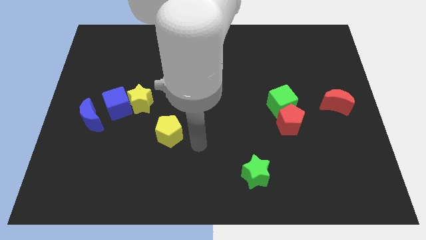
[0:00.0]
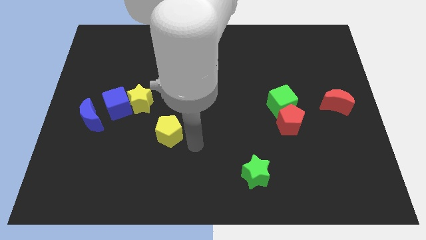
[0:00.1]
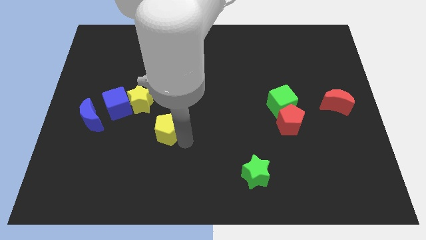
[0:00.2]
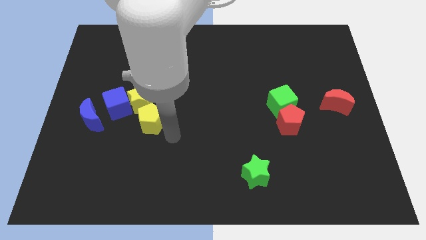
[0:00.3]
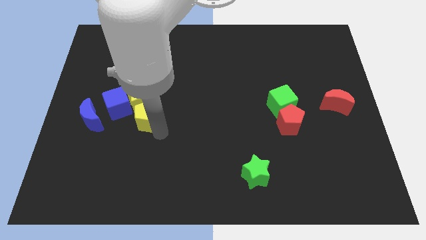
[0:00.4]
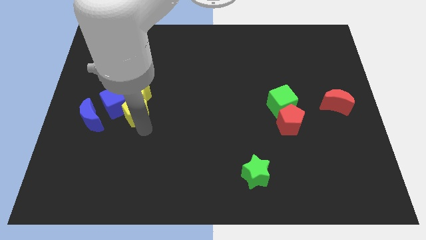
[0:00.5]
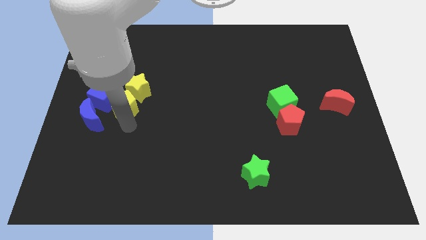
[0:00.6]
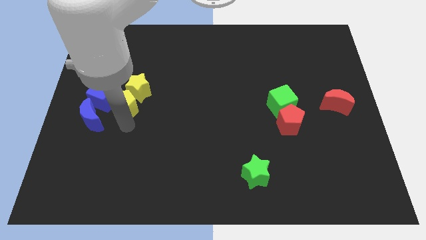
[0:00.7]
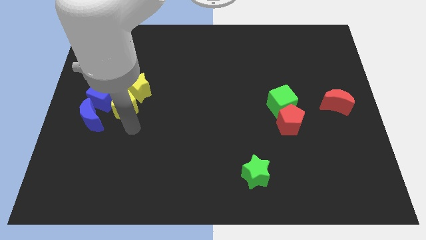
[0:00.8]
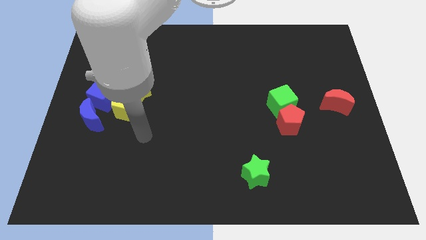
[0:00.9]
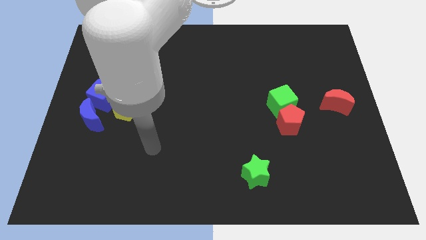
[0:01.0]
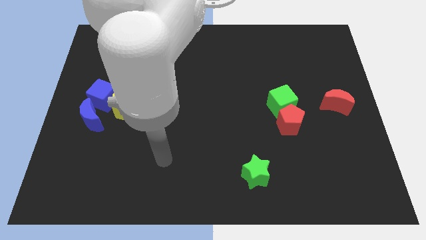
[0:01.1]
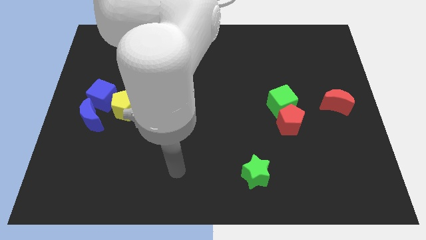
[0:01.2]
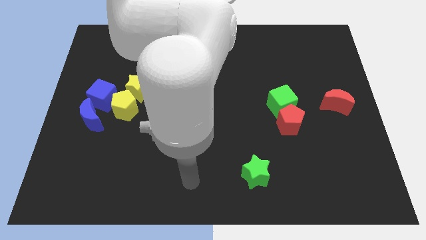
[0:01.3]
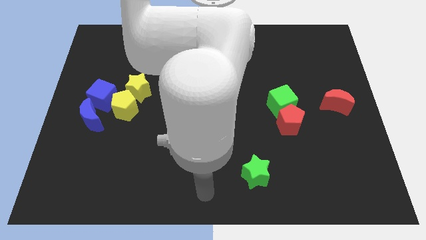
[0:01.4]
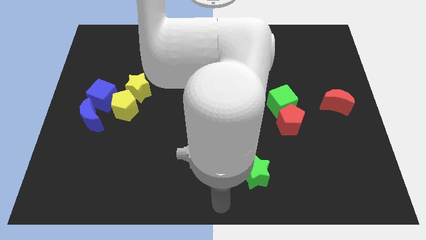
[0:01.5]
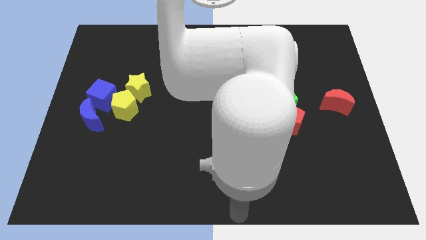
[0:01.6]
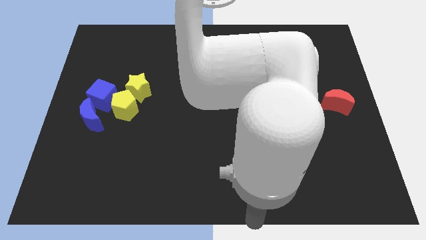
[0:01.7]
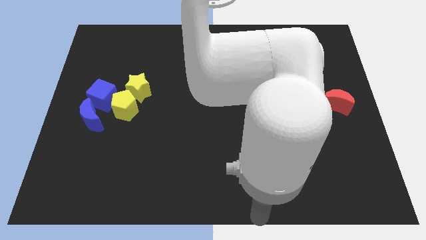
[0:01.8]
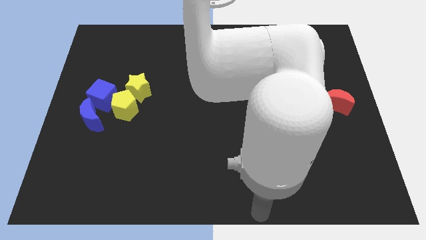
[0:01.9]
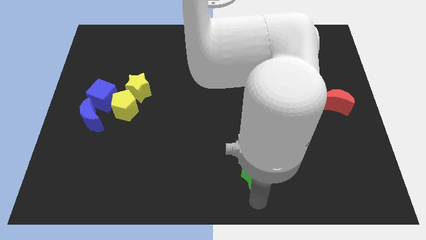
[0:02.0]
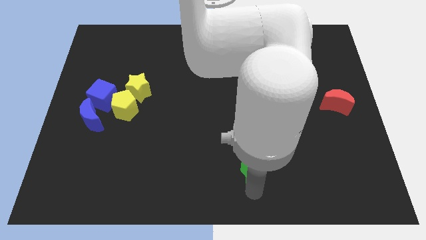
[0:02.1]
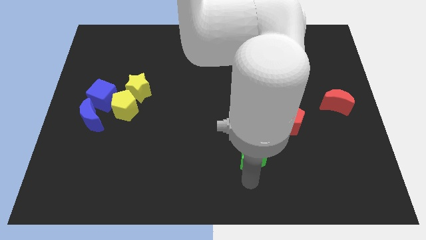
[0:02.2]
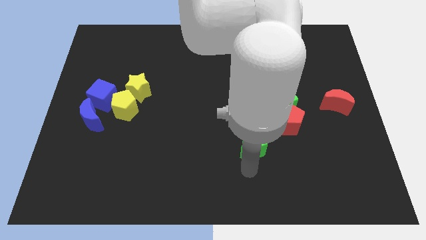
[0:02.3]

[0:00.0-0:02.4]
point your arm below green star

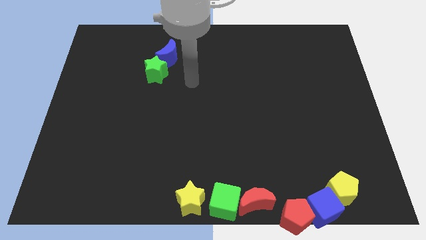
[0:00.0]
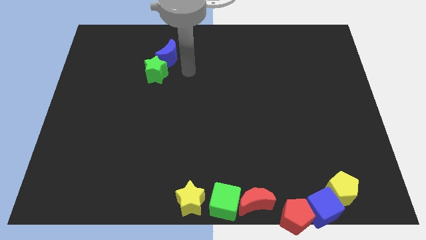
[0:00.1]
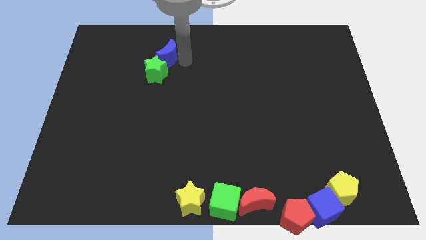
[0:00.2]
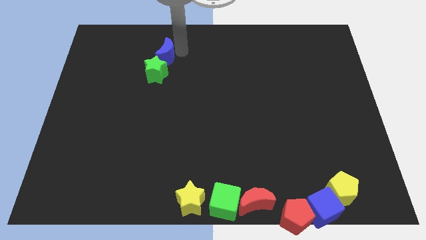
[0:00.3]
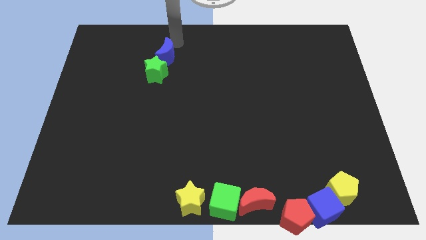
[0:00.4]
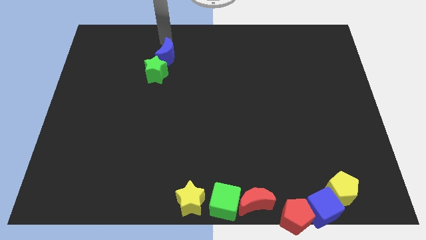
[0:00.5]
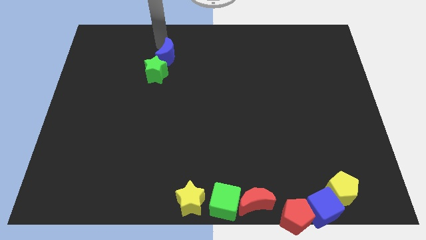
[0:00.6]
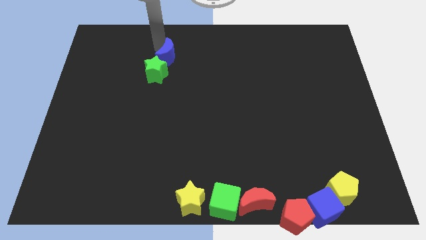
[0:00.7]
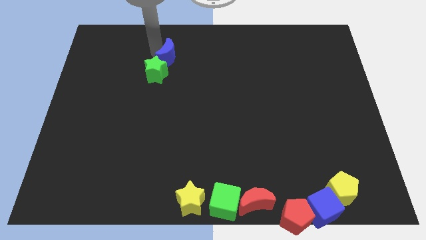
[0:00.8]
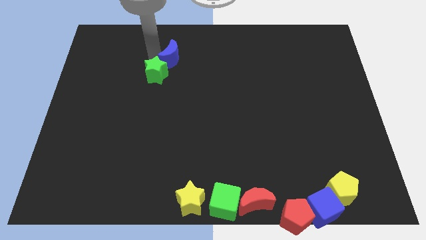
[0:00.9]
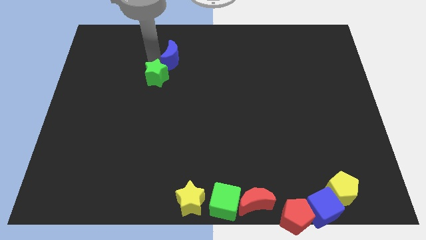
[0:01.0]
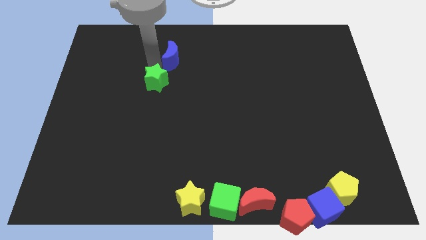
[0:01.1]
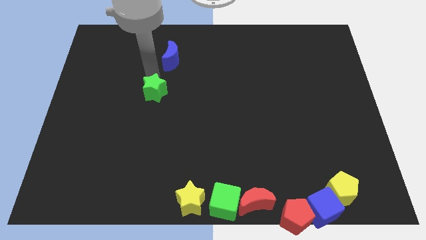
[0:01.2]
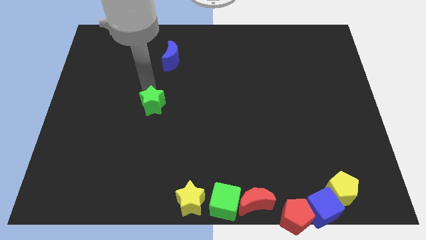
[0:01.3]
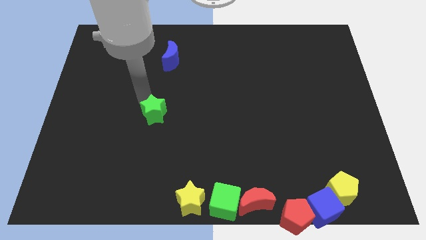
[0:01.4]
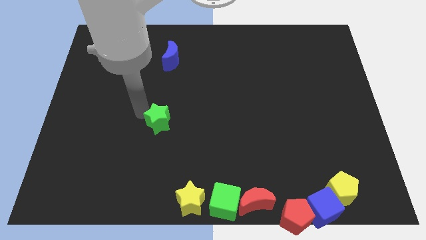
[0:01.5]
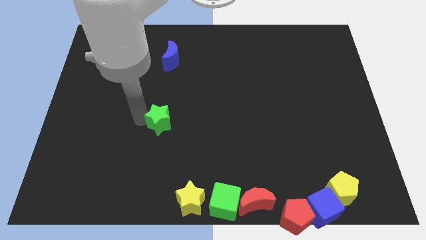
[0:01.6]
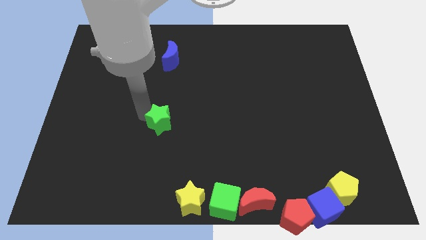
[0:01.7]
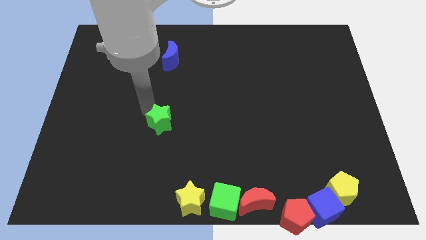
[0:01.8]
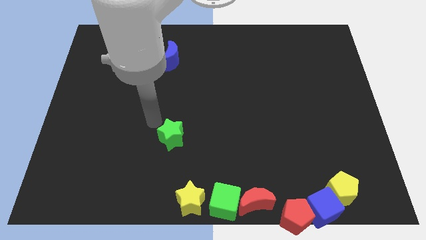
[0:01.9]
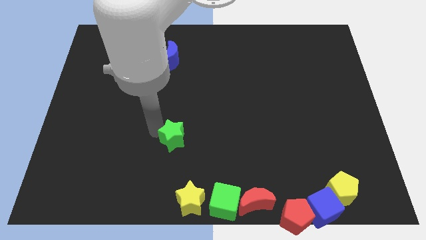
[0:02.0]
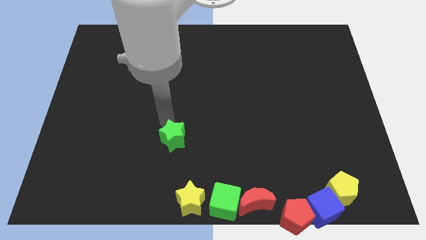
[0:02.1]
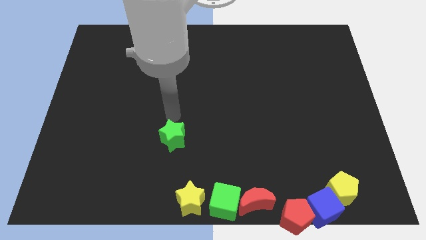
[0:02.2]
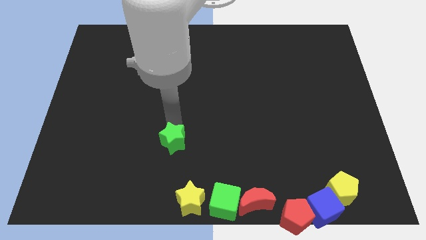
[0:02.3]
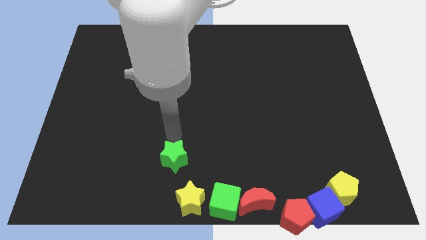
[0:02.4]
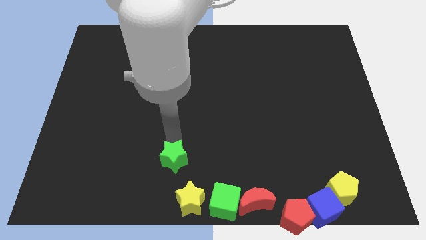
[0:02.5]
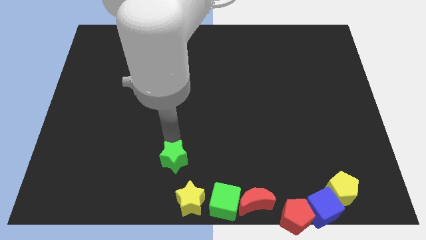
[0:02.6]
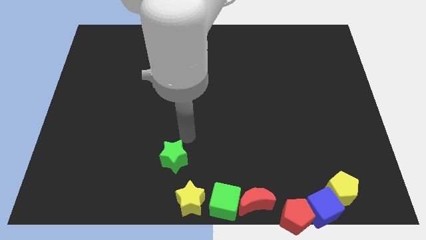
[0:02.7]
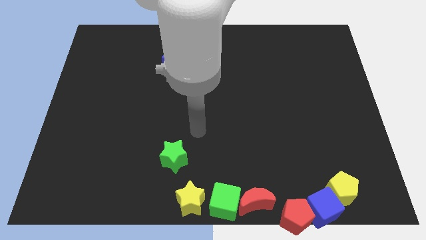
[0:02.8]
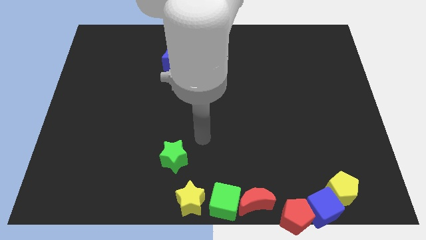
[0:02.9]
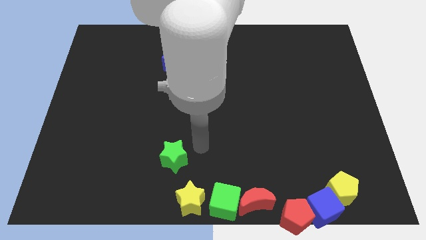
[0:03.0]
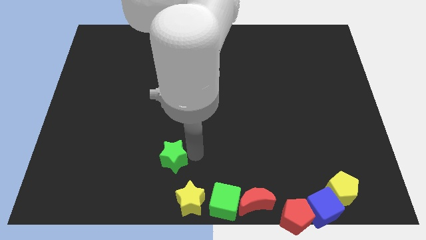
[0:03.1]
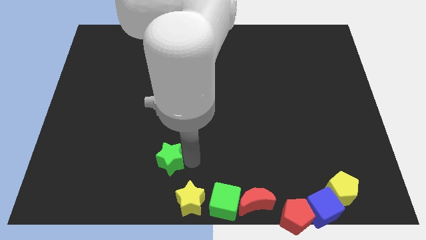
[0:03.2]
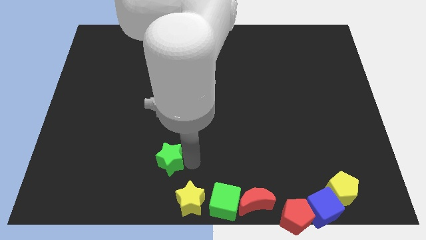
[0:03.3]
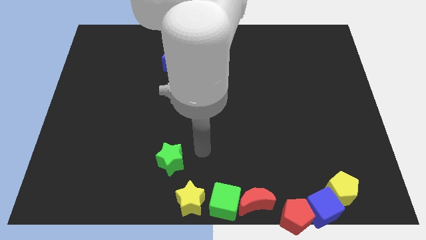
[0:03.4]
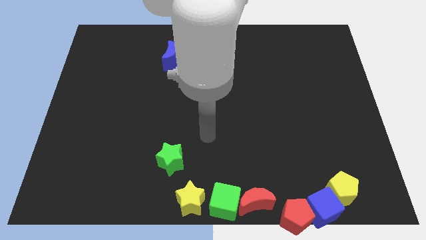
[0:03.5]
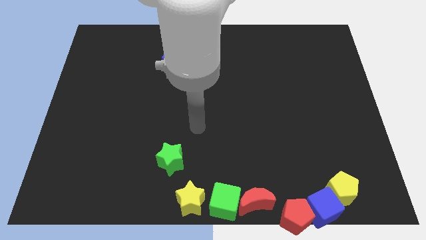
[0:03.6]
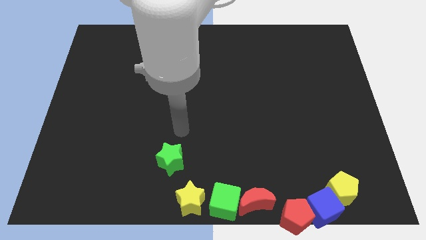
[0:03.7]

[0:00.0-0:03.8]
move the green star diagonal left of yellow star

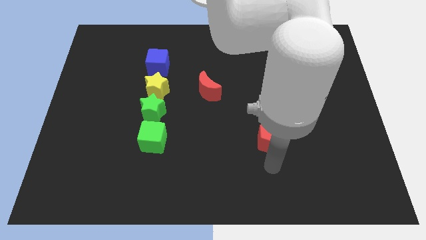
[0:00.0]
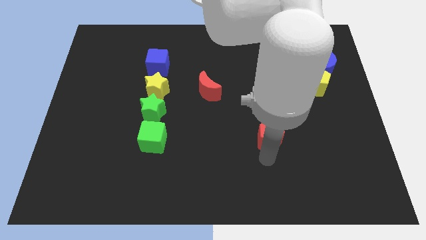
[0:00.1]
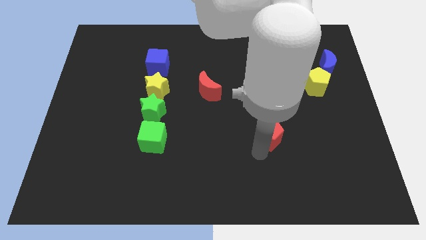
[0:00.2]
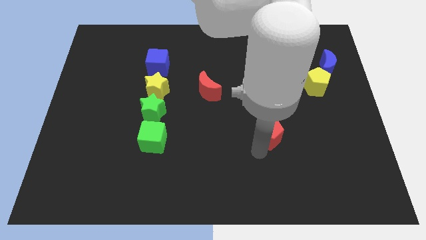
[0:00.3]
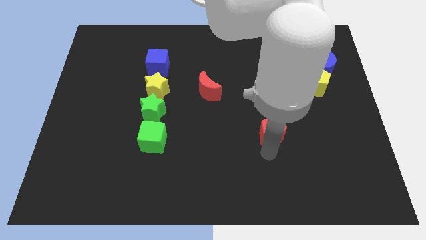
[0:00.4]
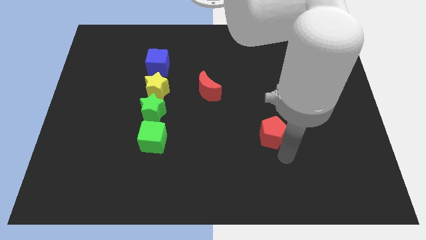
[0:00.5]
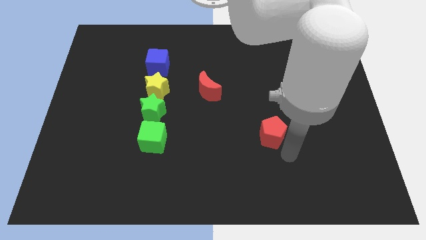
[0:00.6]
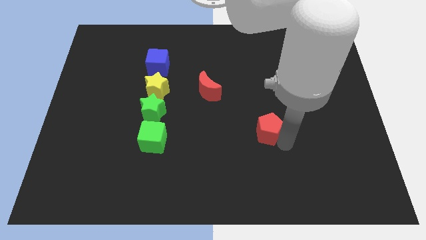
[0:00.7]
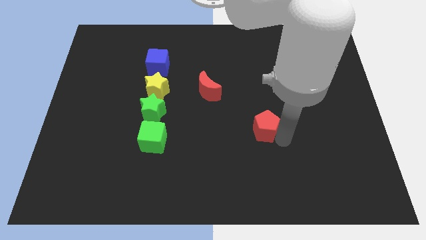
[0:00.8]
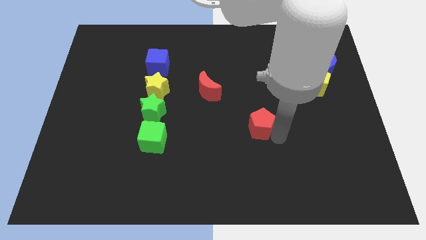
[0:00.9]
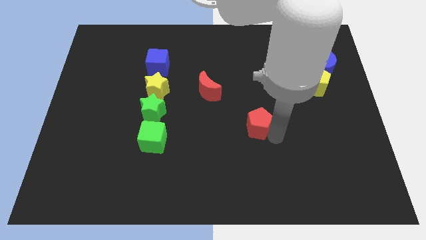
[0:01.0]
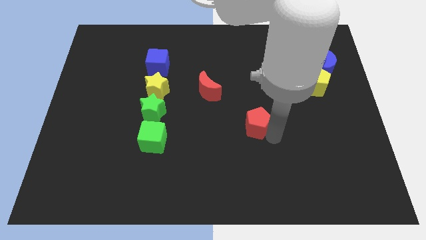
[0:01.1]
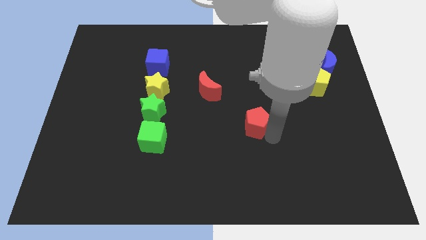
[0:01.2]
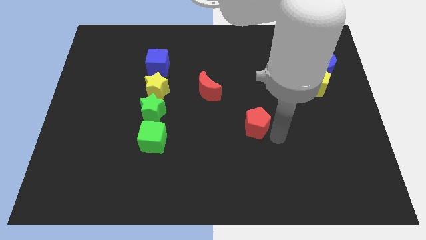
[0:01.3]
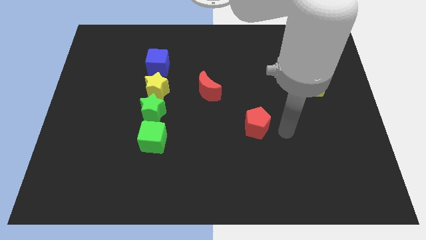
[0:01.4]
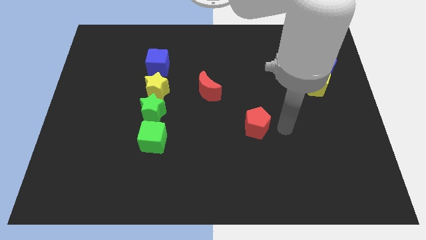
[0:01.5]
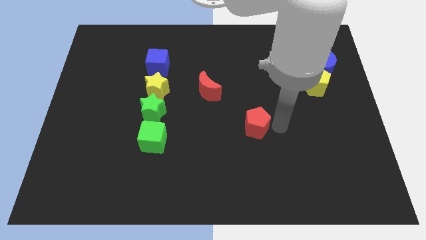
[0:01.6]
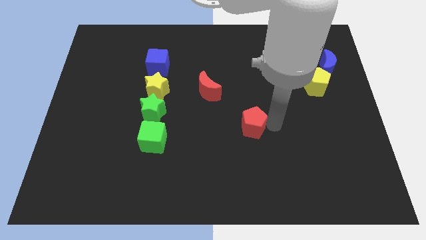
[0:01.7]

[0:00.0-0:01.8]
push the red pentagon towards center of the board

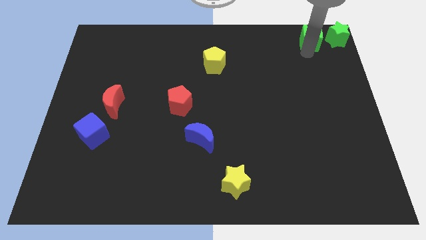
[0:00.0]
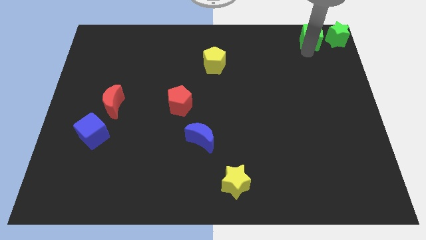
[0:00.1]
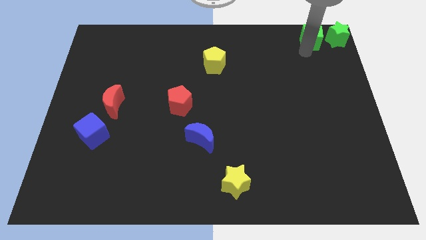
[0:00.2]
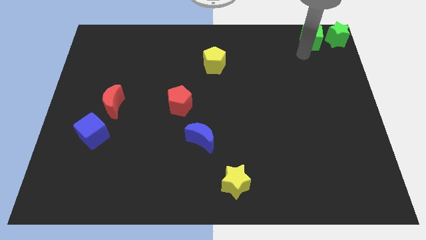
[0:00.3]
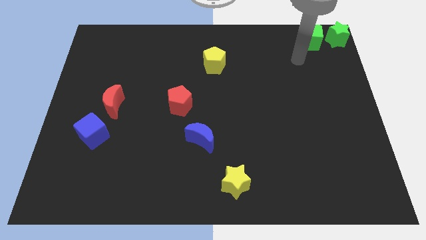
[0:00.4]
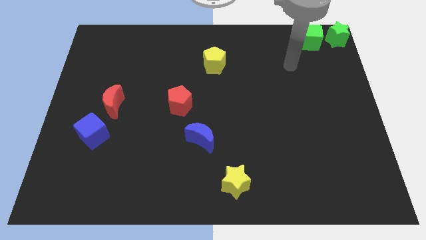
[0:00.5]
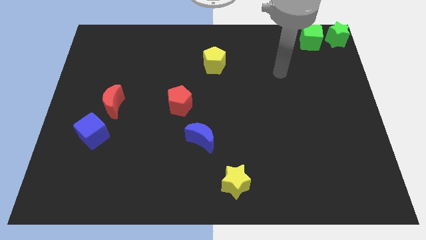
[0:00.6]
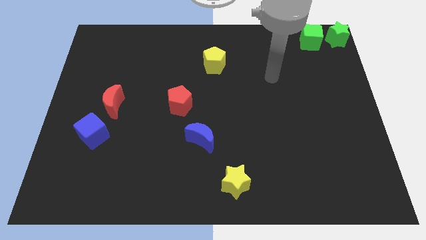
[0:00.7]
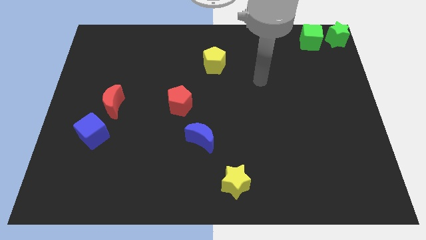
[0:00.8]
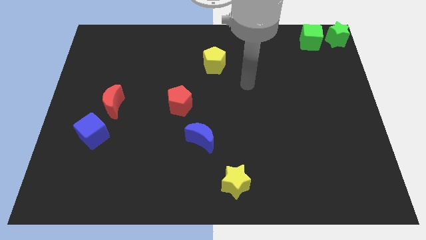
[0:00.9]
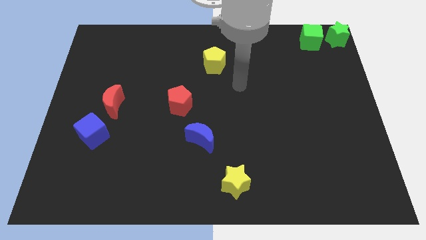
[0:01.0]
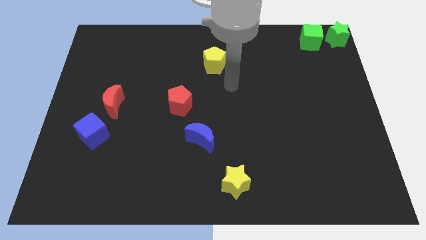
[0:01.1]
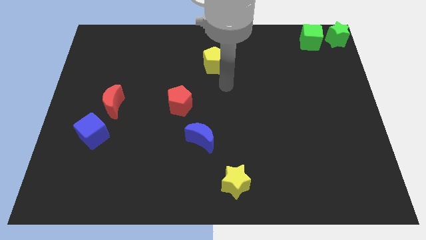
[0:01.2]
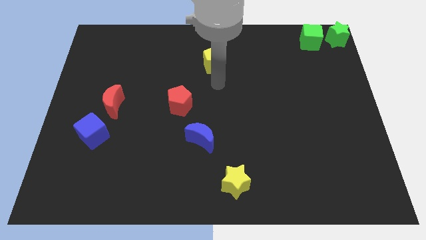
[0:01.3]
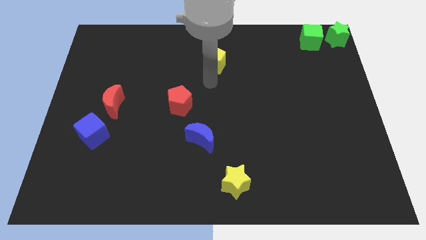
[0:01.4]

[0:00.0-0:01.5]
move the arm towards the bottom of the yellow pentagon
